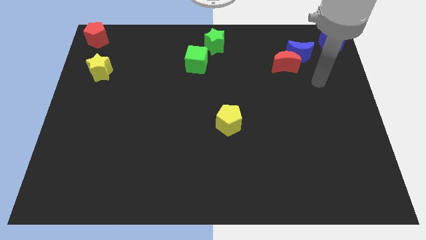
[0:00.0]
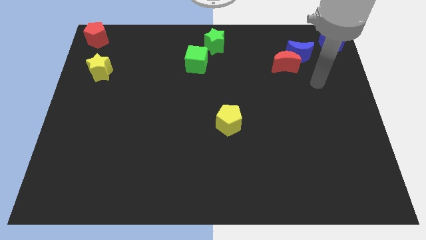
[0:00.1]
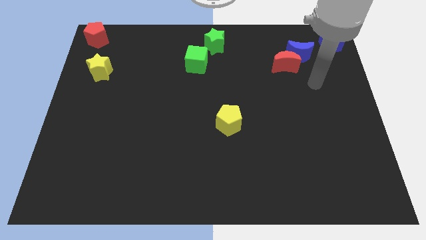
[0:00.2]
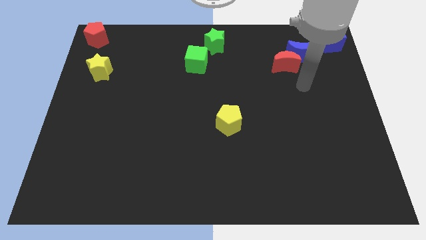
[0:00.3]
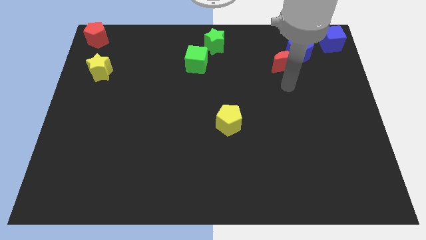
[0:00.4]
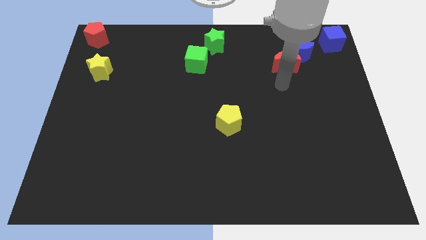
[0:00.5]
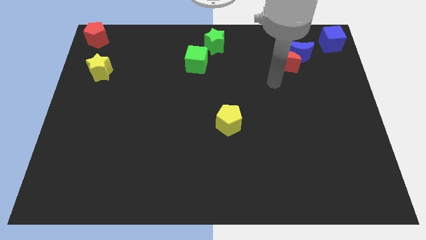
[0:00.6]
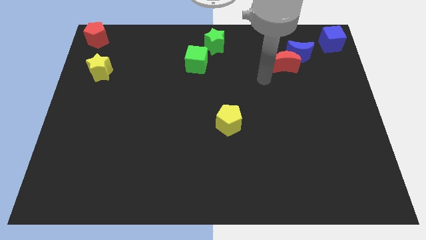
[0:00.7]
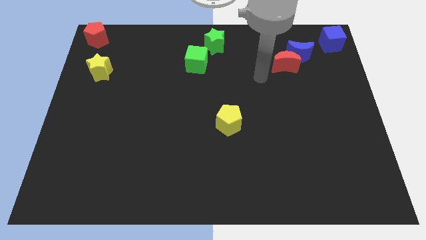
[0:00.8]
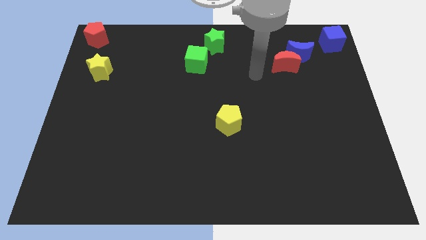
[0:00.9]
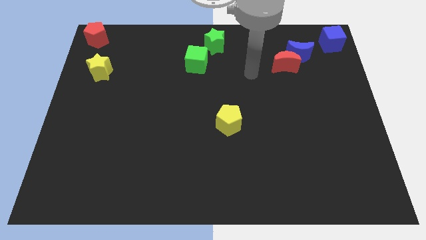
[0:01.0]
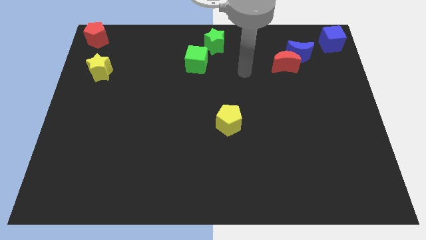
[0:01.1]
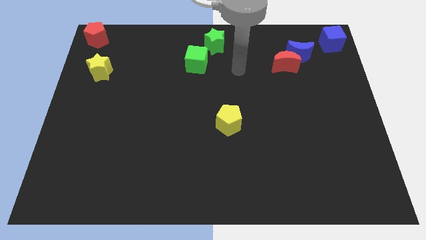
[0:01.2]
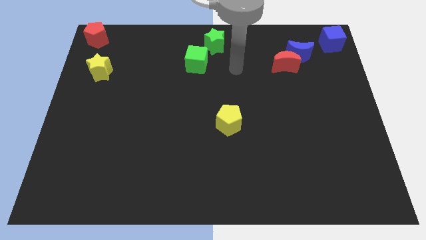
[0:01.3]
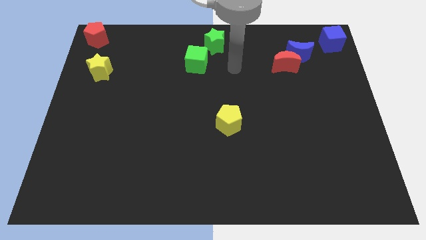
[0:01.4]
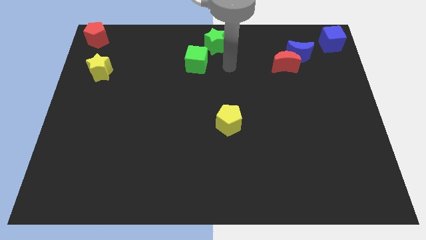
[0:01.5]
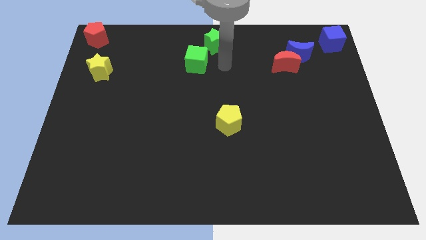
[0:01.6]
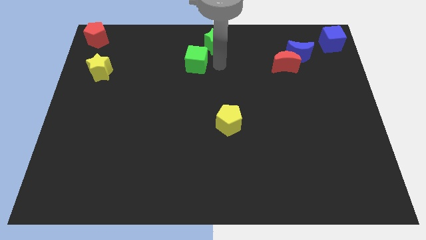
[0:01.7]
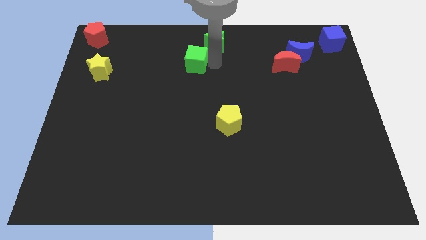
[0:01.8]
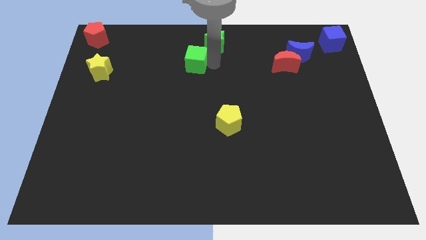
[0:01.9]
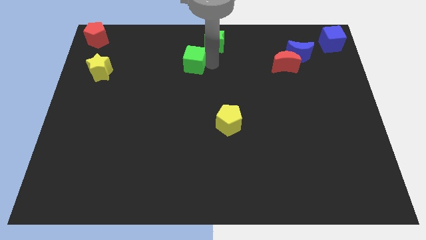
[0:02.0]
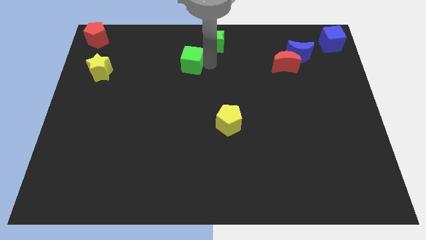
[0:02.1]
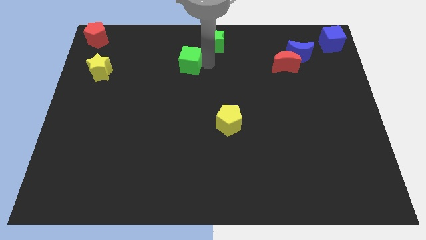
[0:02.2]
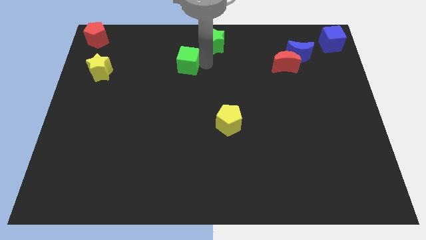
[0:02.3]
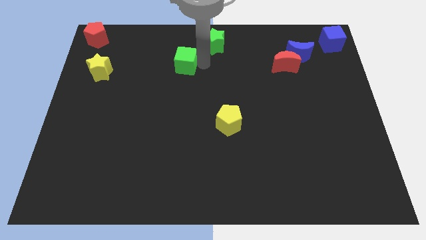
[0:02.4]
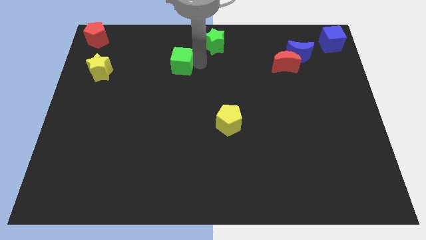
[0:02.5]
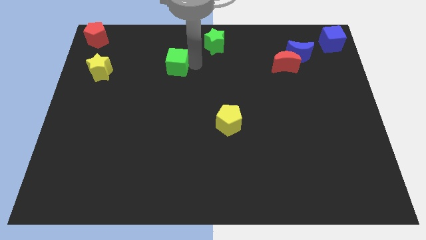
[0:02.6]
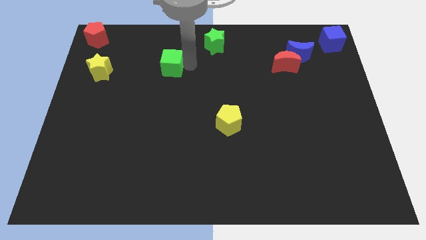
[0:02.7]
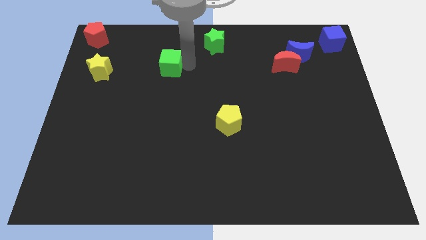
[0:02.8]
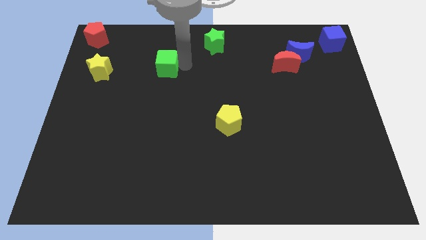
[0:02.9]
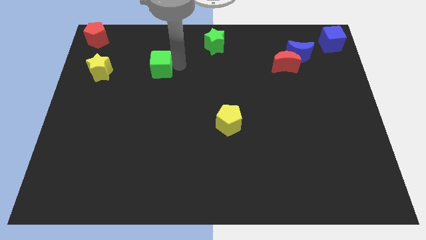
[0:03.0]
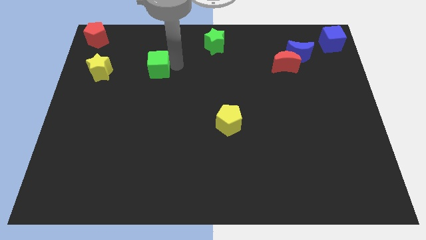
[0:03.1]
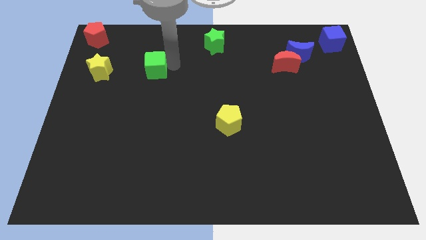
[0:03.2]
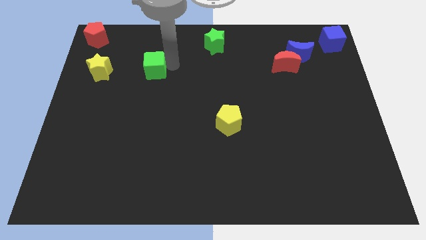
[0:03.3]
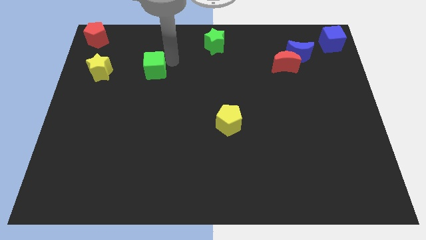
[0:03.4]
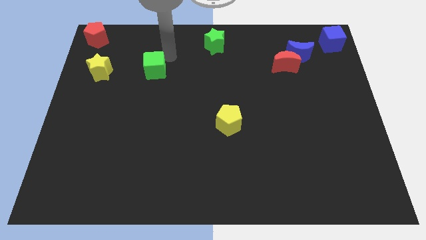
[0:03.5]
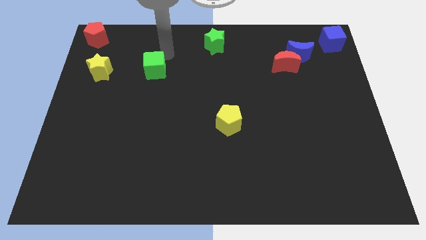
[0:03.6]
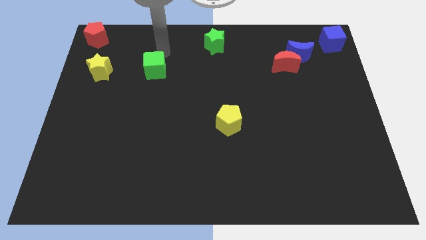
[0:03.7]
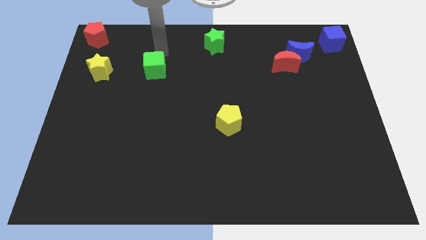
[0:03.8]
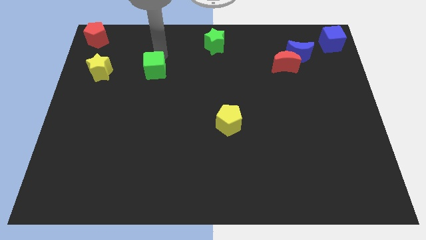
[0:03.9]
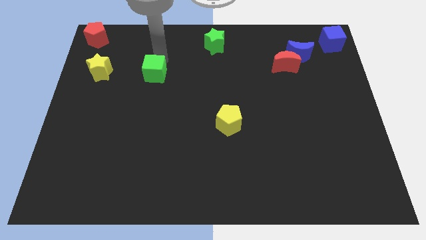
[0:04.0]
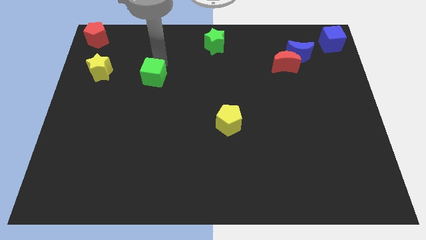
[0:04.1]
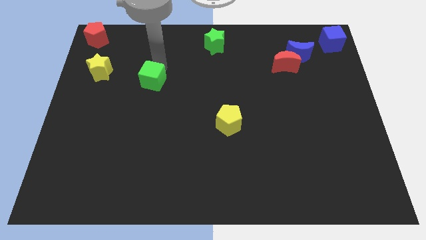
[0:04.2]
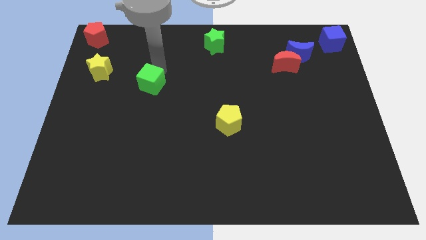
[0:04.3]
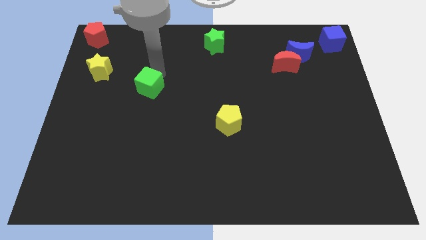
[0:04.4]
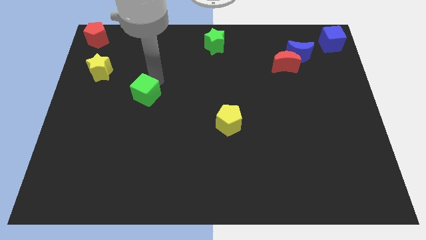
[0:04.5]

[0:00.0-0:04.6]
move the green cube away from the green star

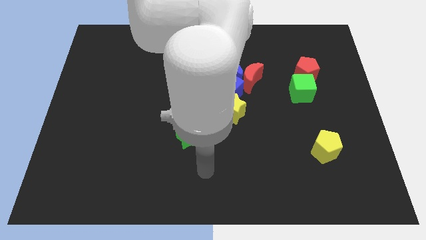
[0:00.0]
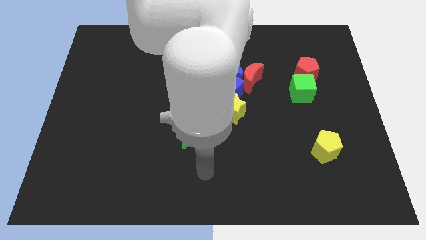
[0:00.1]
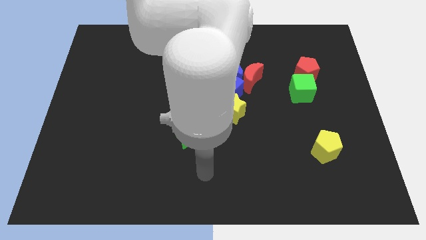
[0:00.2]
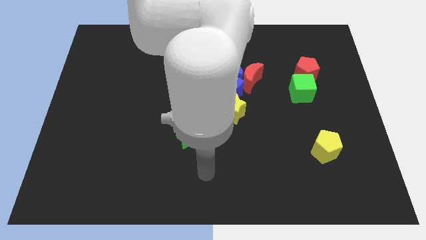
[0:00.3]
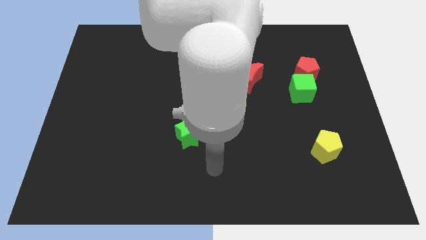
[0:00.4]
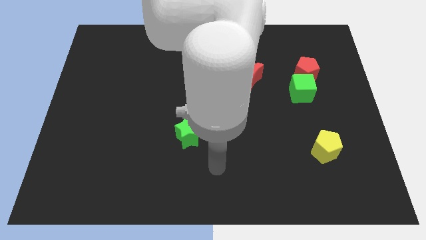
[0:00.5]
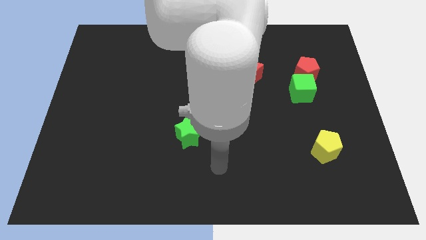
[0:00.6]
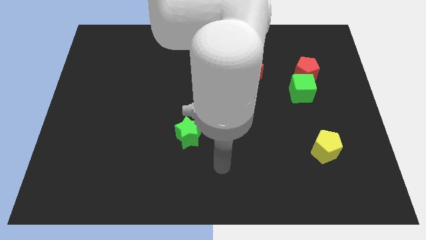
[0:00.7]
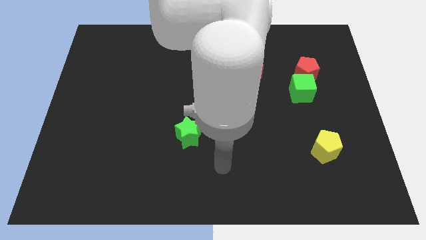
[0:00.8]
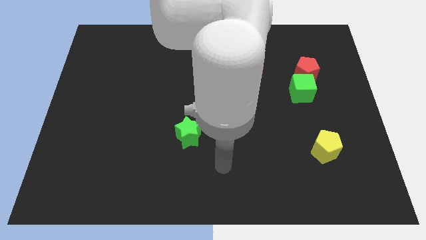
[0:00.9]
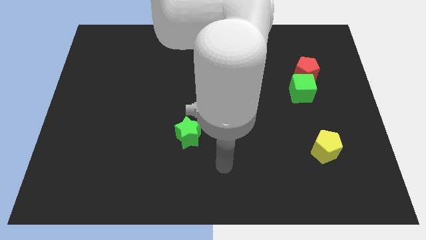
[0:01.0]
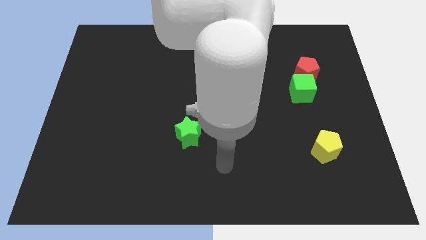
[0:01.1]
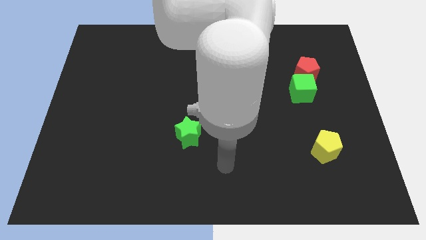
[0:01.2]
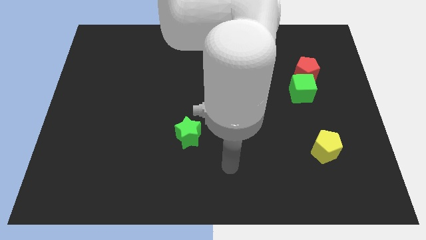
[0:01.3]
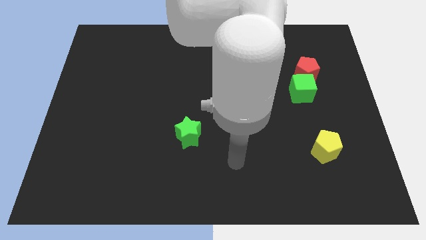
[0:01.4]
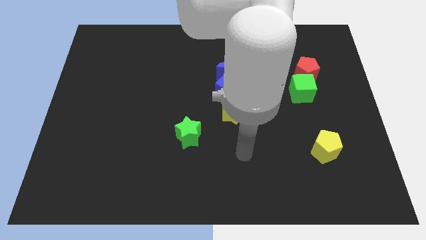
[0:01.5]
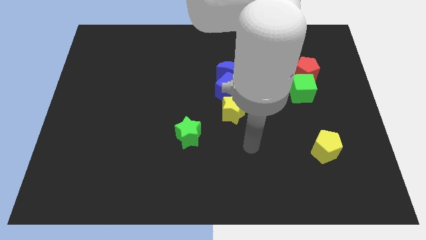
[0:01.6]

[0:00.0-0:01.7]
move your arm to the top of the board

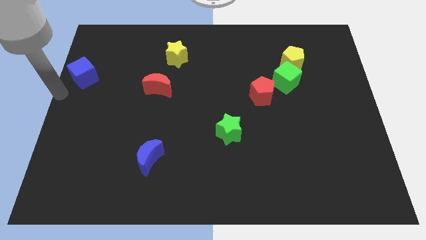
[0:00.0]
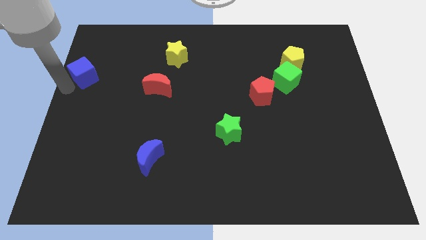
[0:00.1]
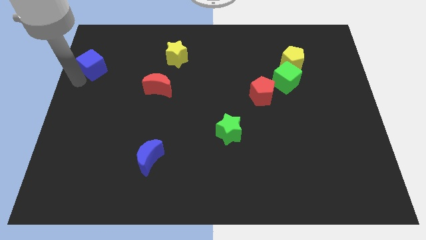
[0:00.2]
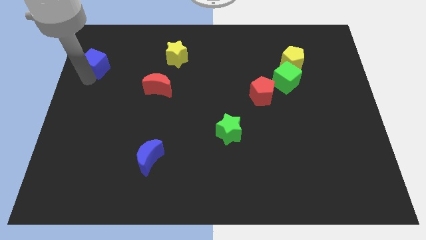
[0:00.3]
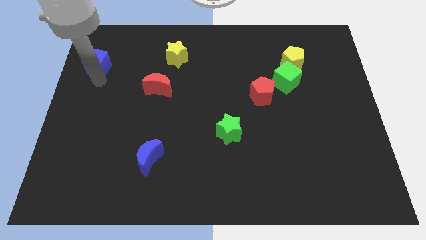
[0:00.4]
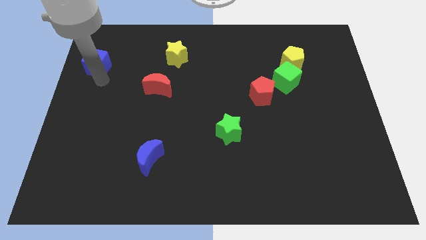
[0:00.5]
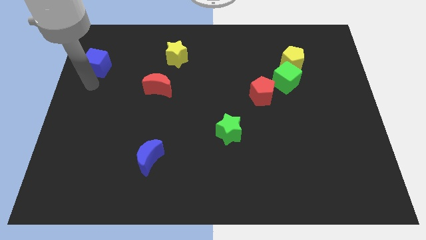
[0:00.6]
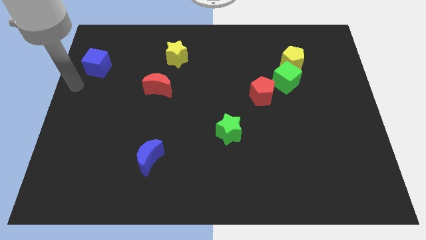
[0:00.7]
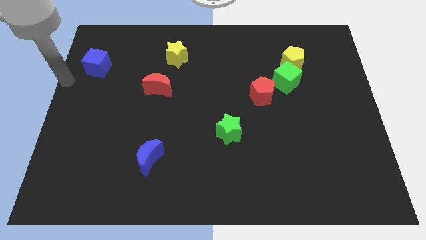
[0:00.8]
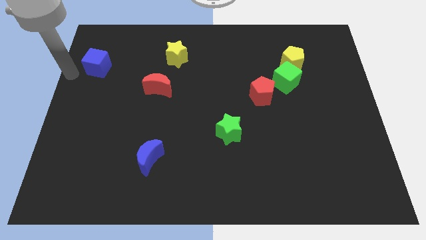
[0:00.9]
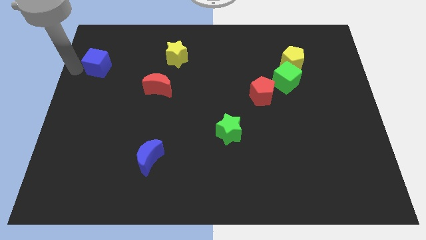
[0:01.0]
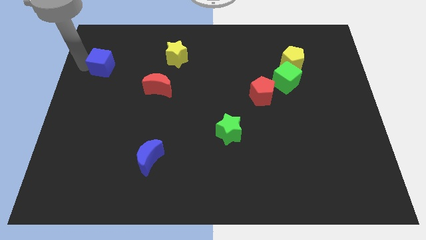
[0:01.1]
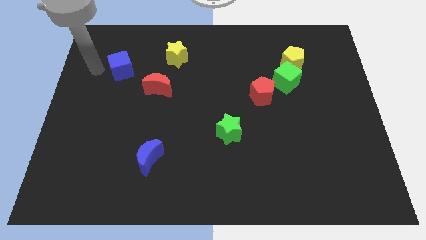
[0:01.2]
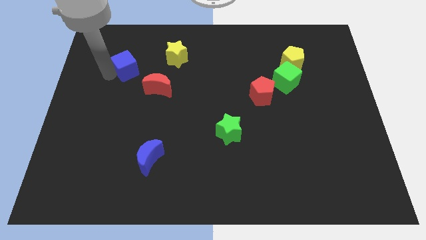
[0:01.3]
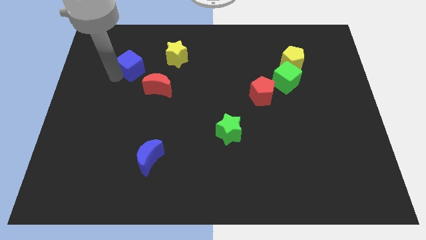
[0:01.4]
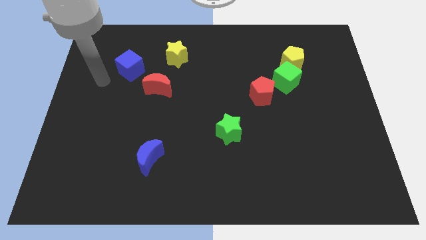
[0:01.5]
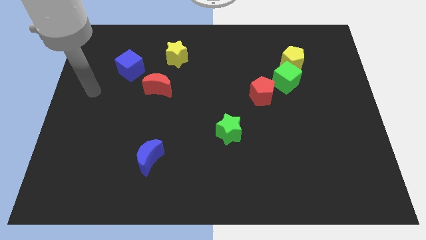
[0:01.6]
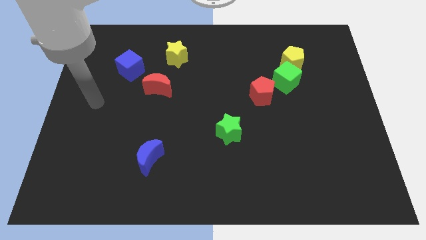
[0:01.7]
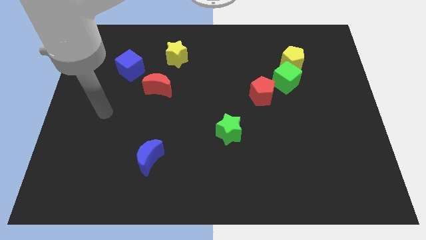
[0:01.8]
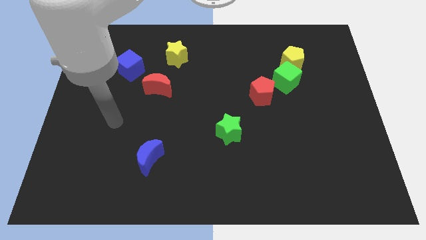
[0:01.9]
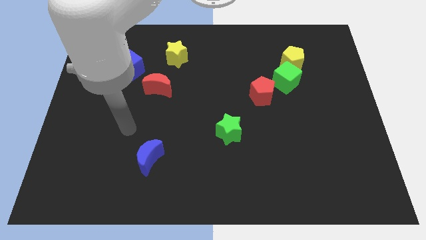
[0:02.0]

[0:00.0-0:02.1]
place blue cube to the top left of red moon

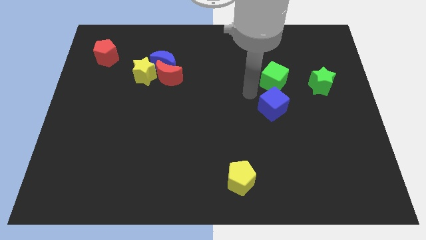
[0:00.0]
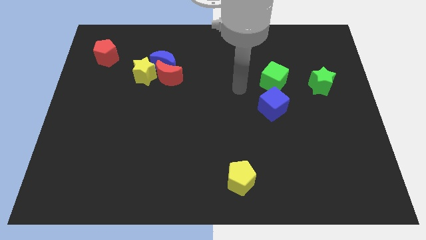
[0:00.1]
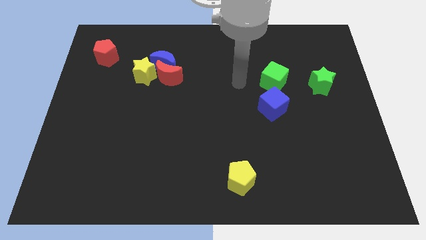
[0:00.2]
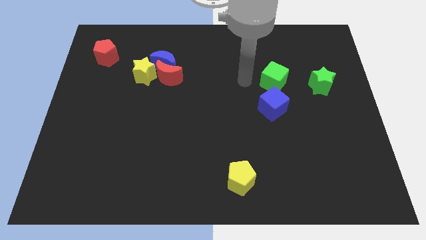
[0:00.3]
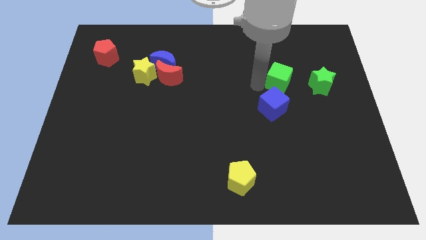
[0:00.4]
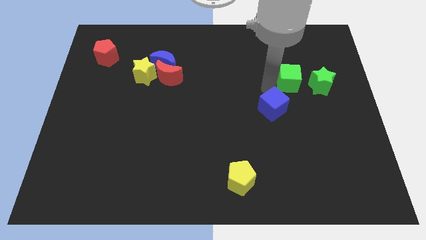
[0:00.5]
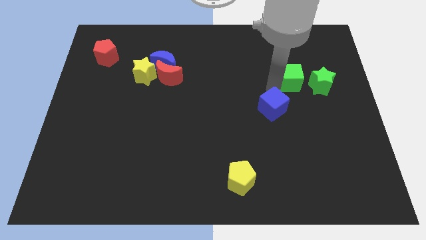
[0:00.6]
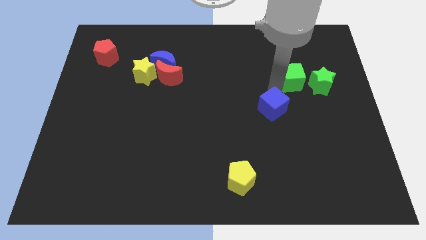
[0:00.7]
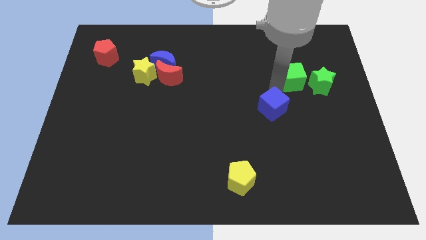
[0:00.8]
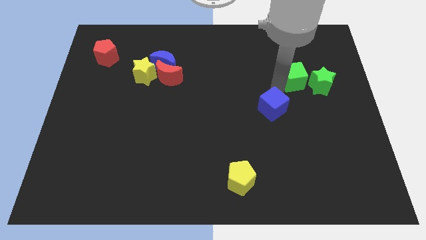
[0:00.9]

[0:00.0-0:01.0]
move the green cube close to the green star
